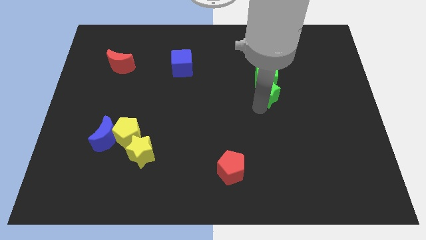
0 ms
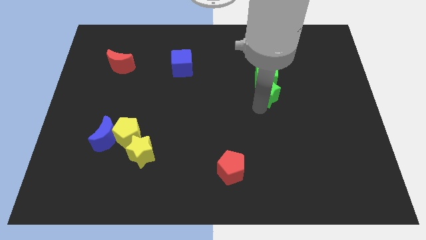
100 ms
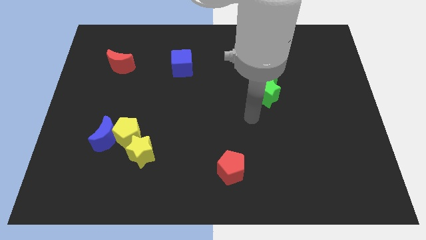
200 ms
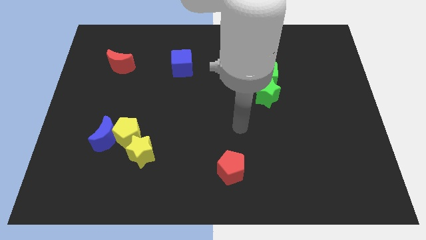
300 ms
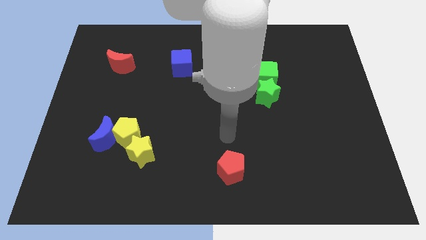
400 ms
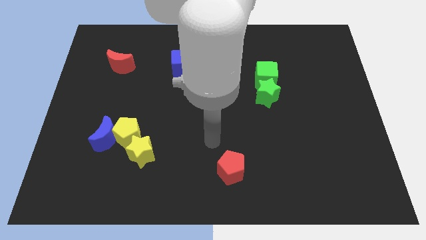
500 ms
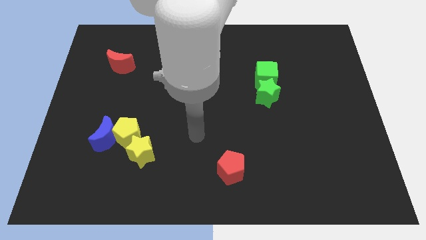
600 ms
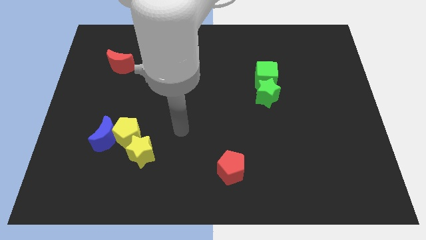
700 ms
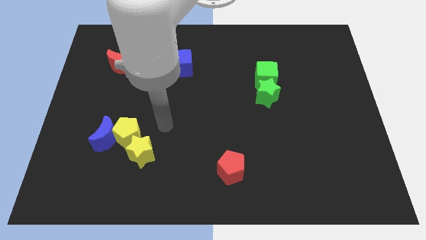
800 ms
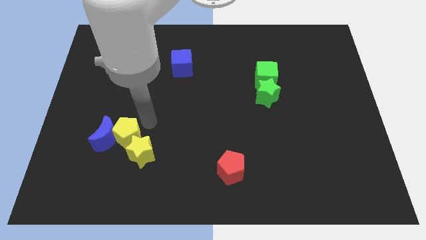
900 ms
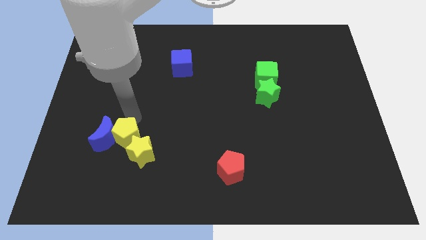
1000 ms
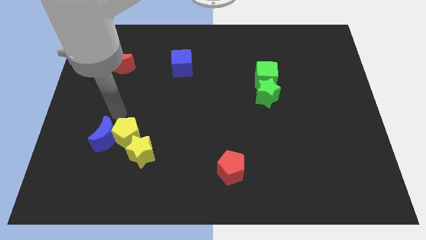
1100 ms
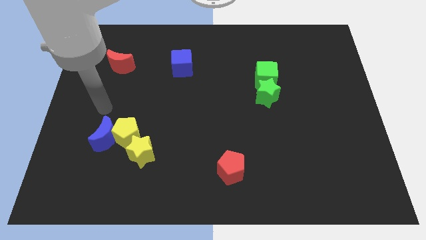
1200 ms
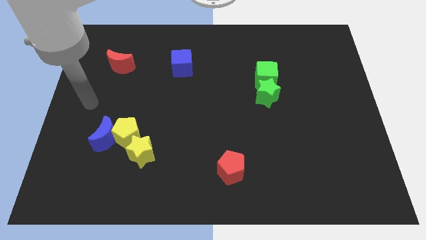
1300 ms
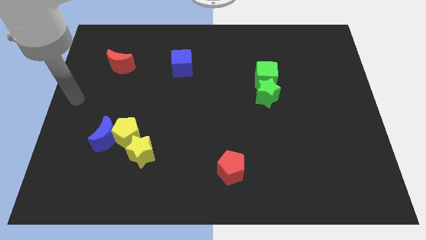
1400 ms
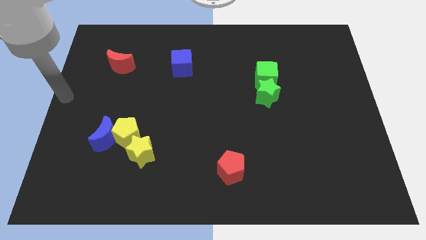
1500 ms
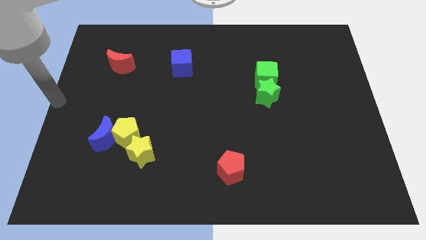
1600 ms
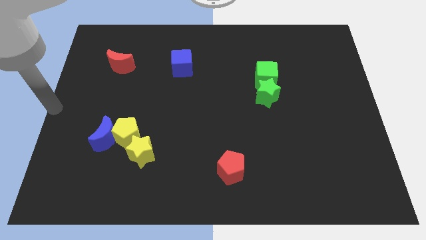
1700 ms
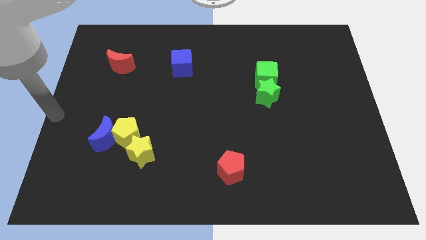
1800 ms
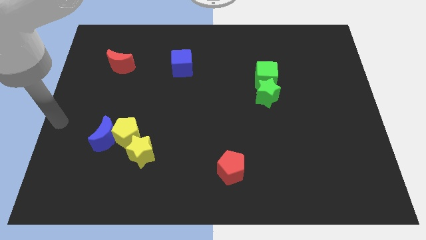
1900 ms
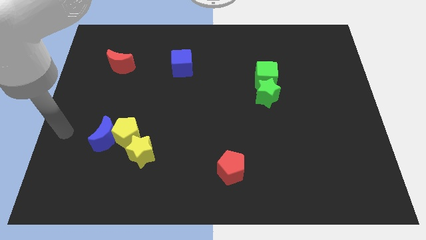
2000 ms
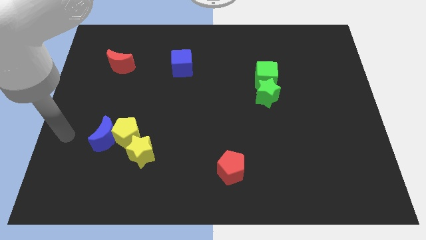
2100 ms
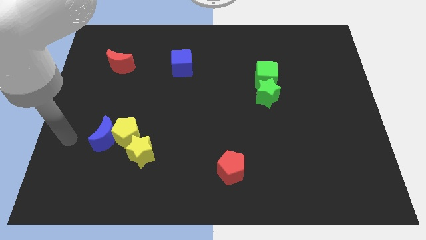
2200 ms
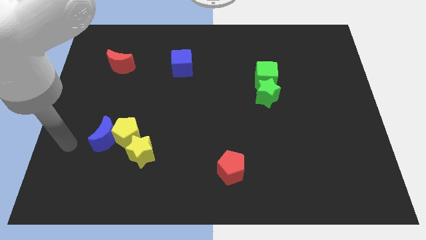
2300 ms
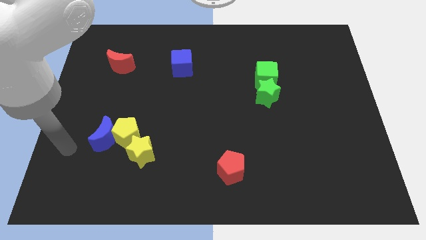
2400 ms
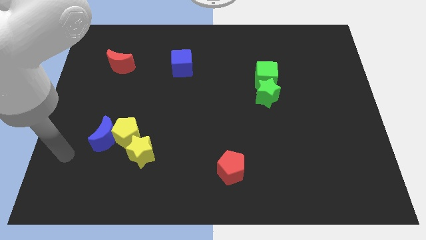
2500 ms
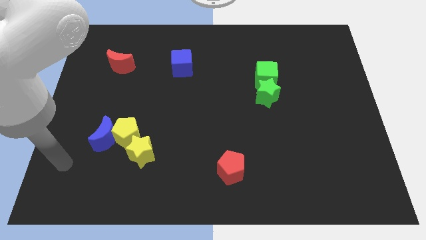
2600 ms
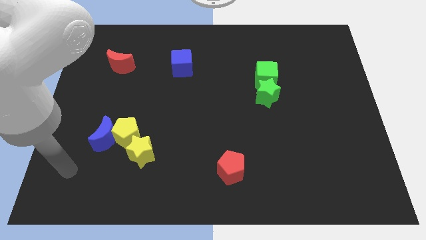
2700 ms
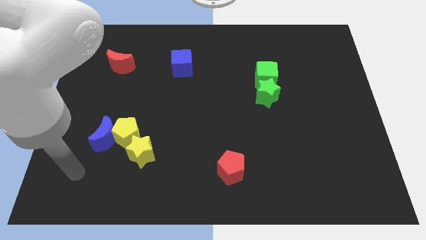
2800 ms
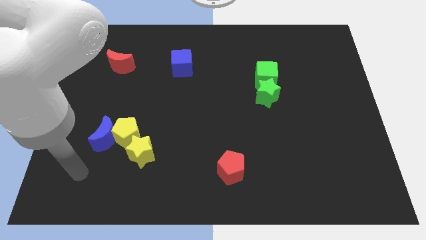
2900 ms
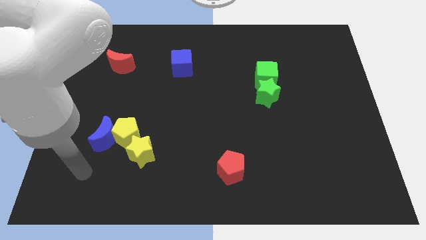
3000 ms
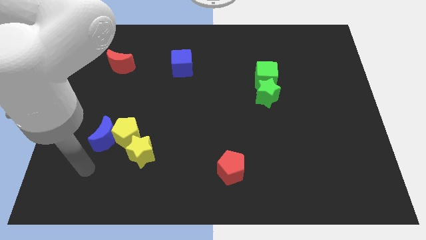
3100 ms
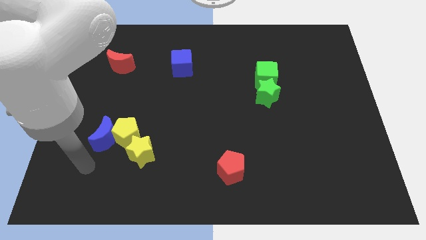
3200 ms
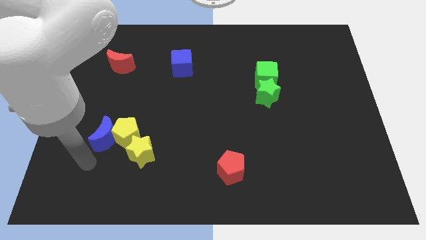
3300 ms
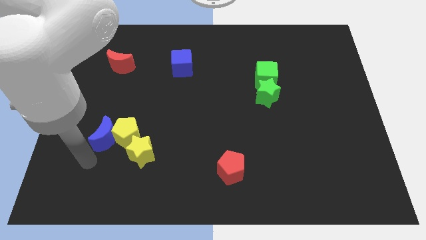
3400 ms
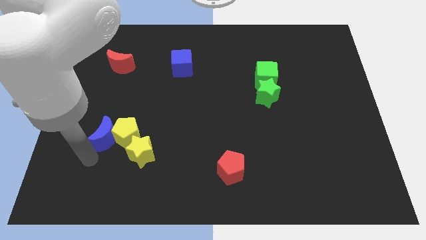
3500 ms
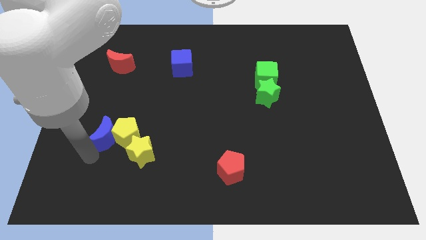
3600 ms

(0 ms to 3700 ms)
point your arm at the bottom of blue moon

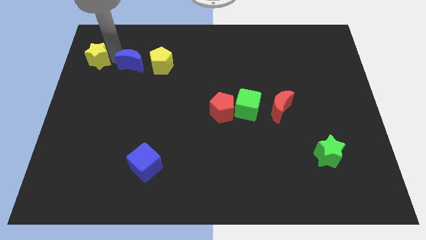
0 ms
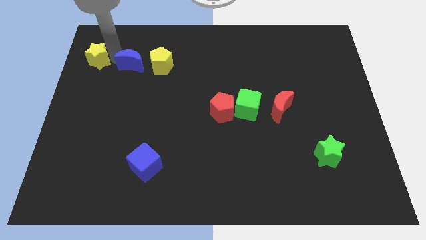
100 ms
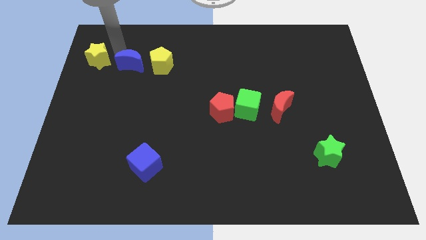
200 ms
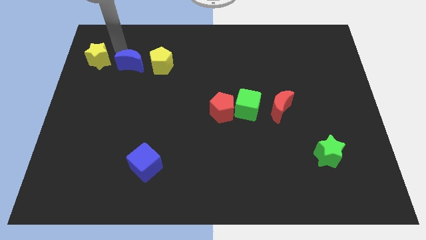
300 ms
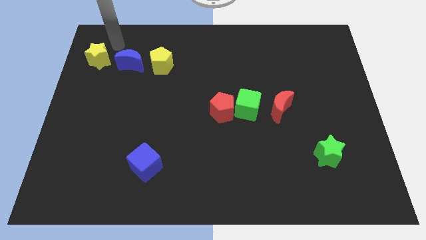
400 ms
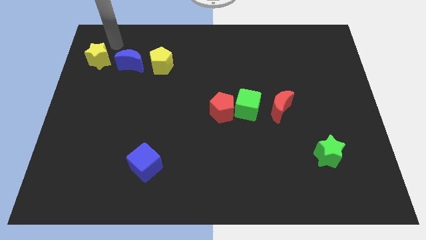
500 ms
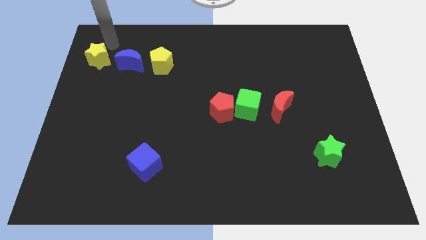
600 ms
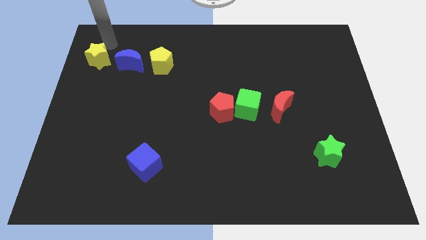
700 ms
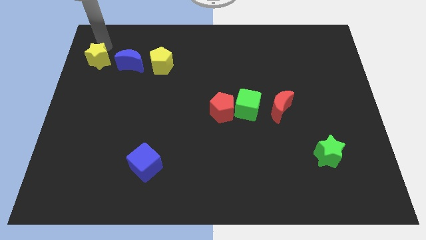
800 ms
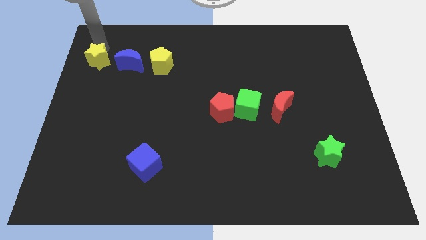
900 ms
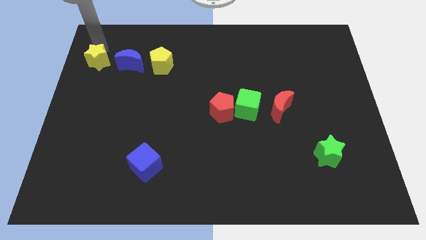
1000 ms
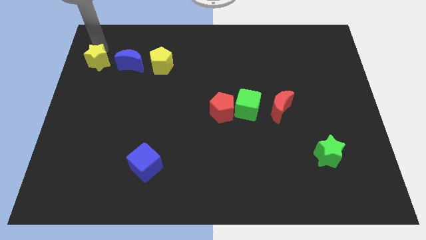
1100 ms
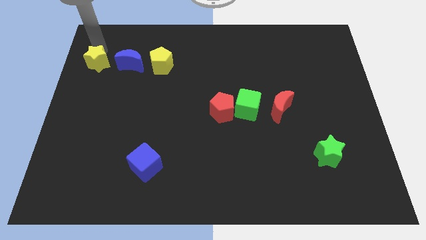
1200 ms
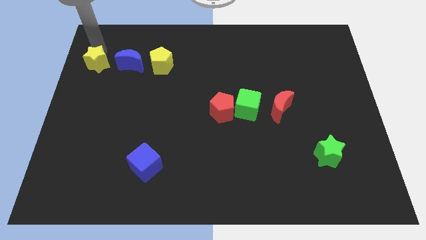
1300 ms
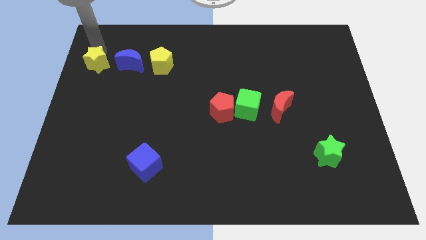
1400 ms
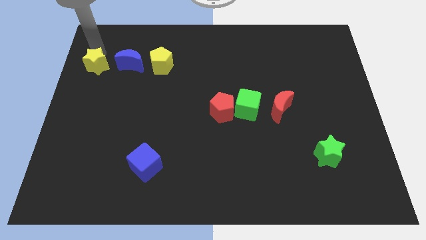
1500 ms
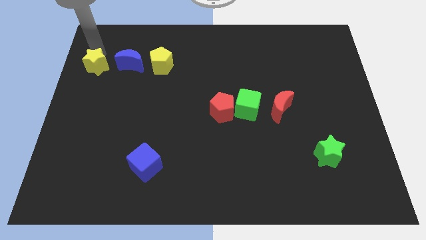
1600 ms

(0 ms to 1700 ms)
touch yellow star which is left to blue moon

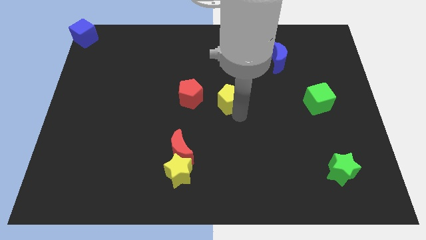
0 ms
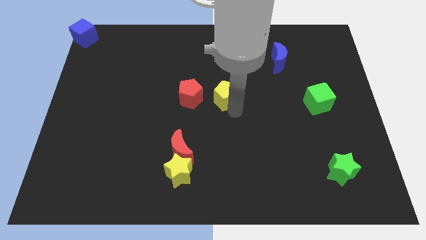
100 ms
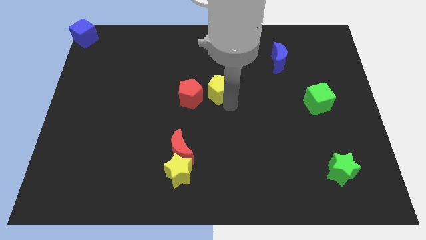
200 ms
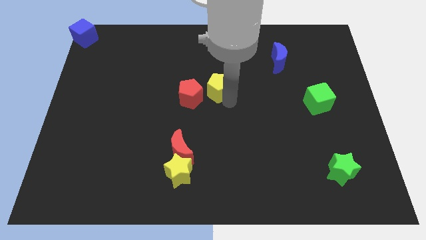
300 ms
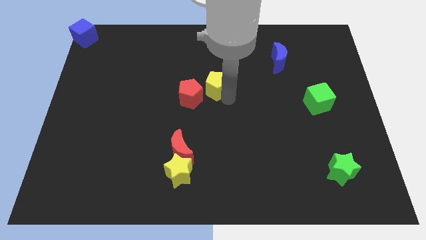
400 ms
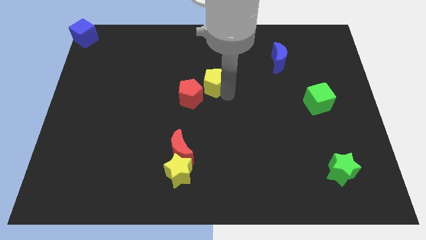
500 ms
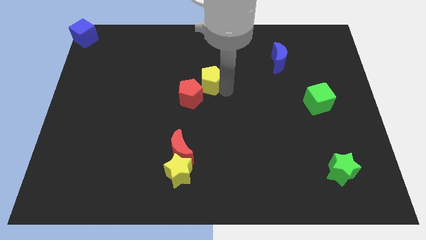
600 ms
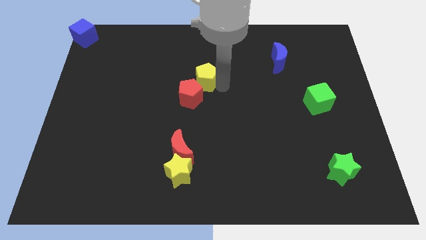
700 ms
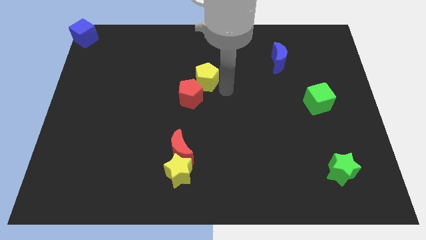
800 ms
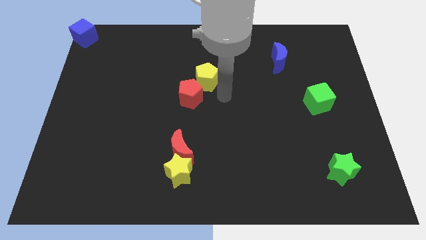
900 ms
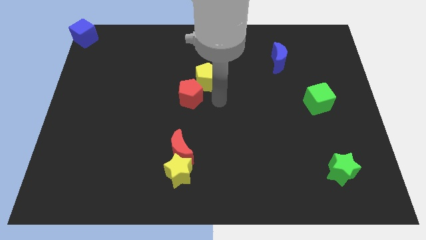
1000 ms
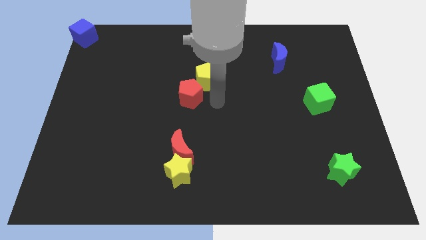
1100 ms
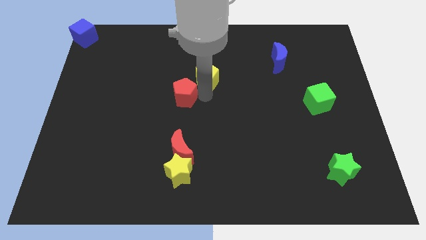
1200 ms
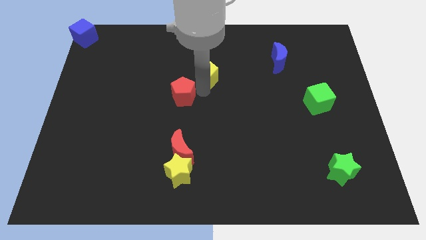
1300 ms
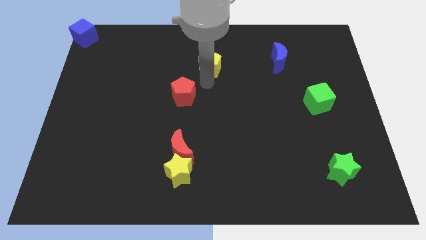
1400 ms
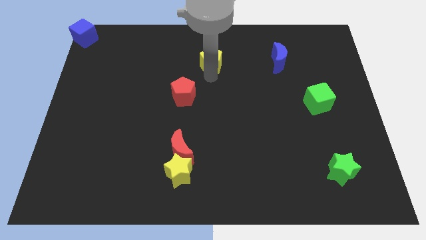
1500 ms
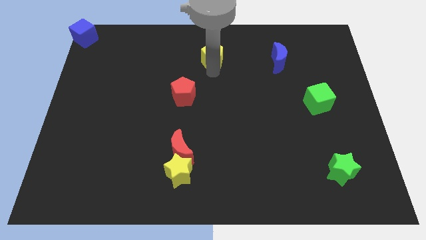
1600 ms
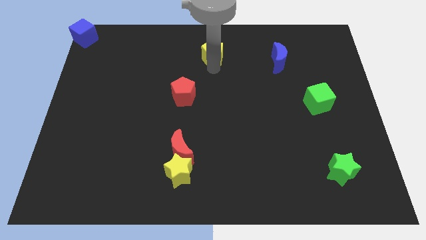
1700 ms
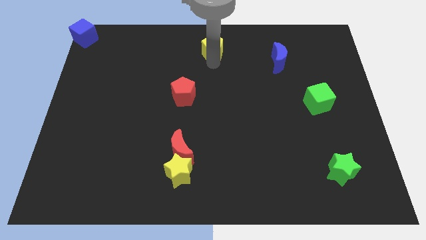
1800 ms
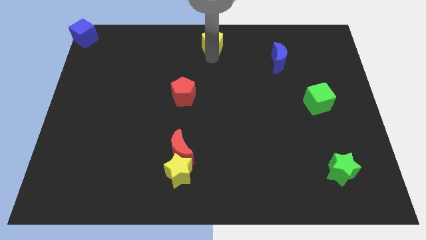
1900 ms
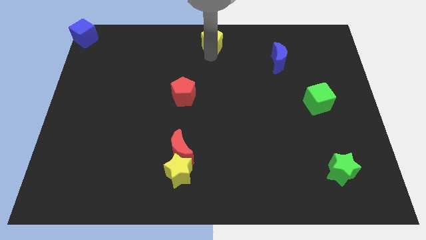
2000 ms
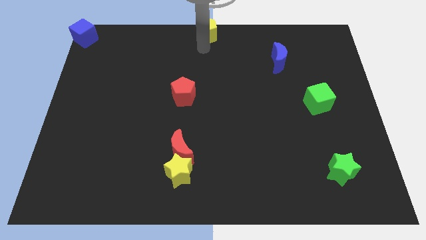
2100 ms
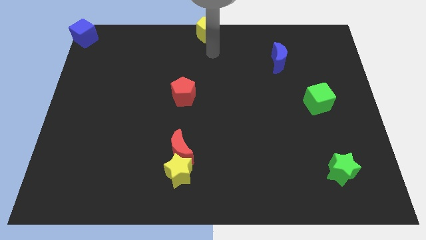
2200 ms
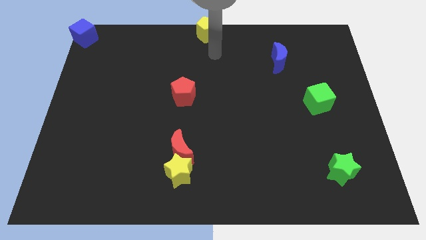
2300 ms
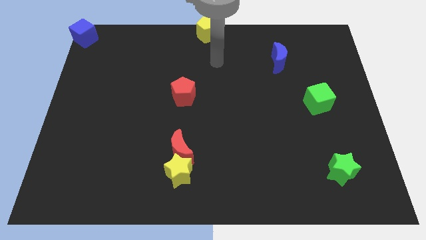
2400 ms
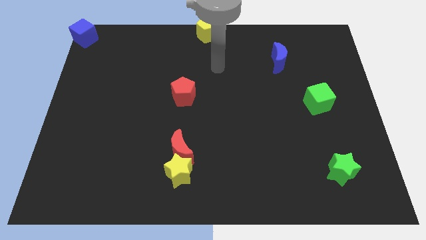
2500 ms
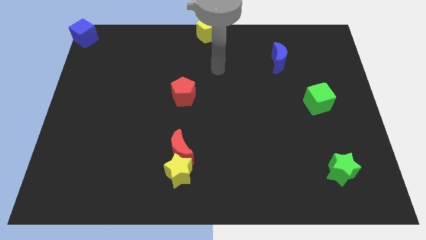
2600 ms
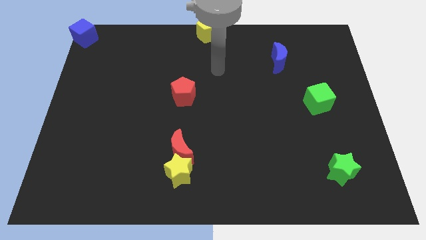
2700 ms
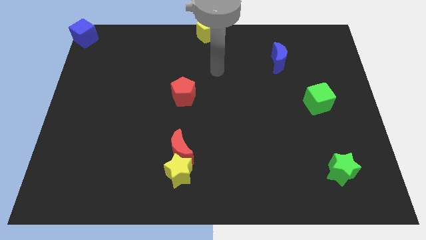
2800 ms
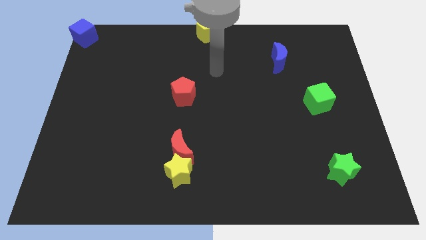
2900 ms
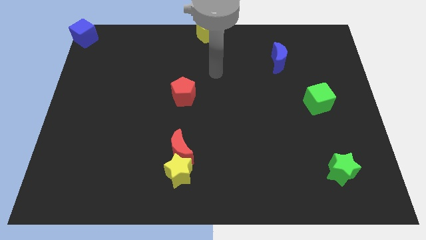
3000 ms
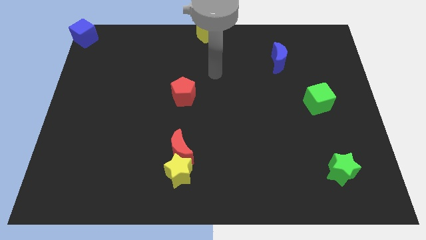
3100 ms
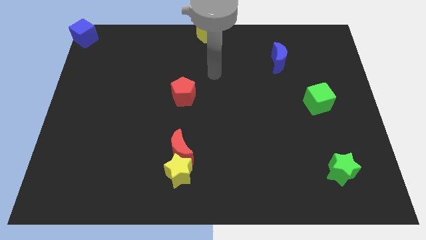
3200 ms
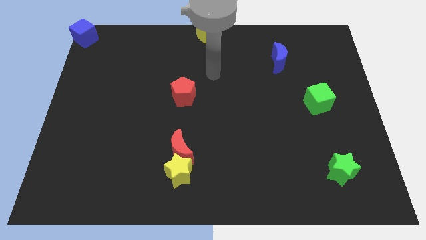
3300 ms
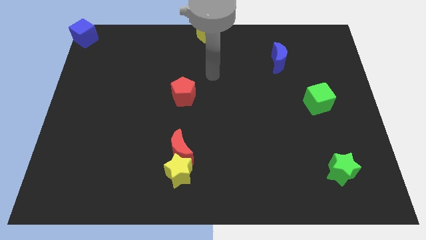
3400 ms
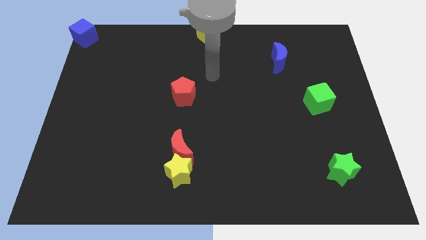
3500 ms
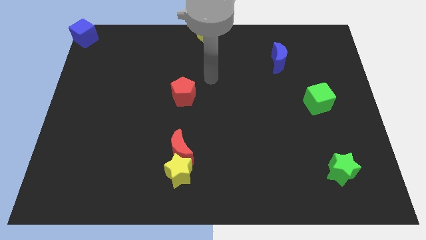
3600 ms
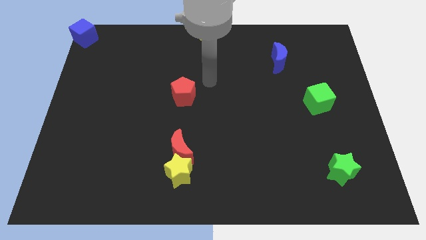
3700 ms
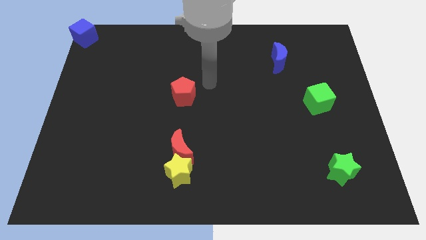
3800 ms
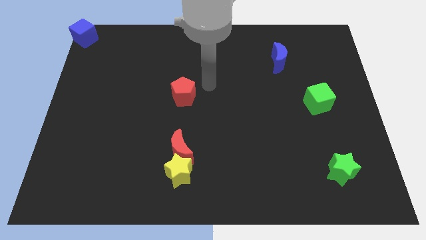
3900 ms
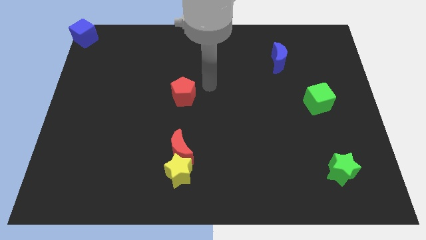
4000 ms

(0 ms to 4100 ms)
place yellow pentagon to the top center
